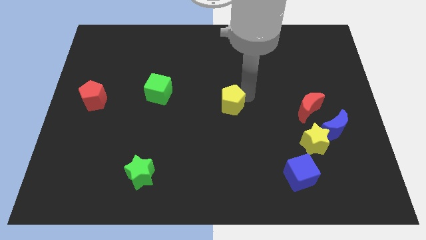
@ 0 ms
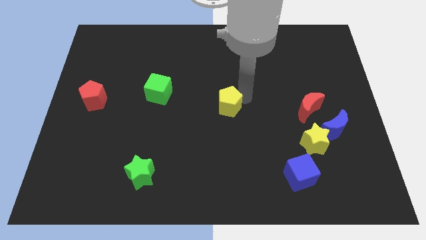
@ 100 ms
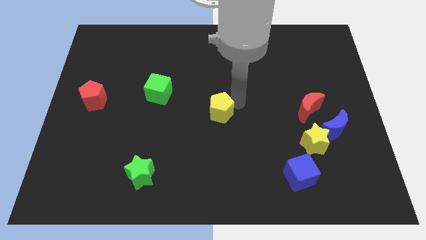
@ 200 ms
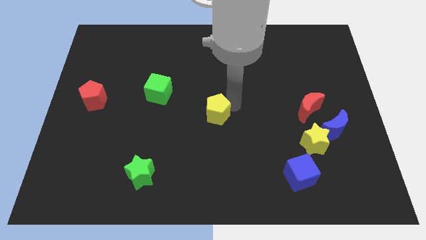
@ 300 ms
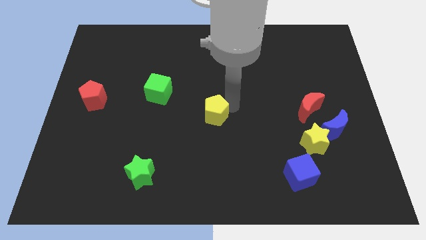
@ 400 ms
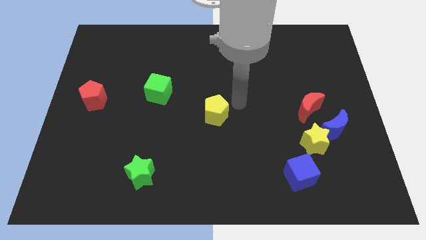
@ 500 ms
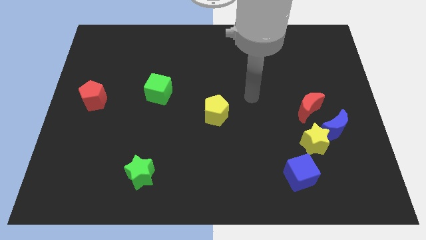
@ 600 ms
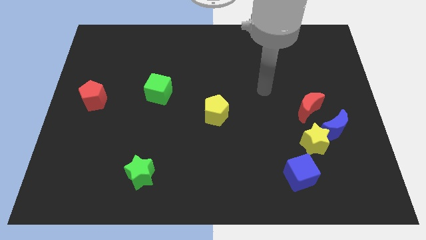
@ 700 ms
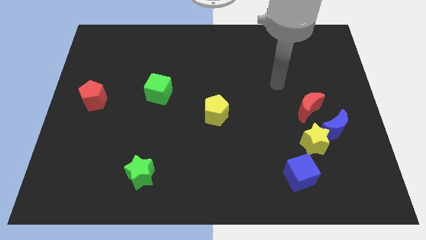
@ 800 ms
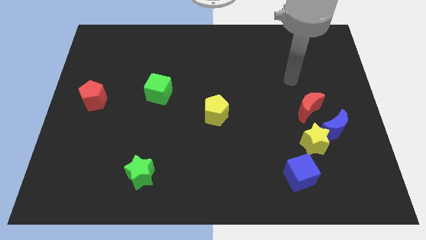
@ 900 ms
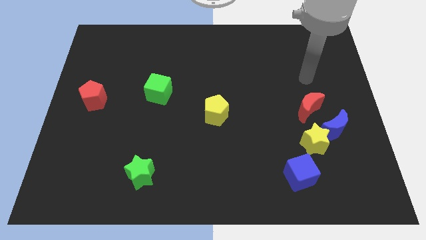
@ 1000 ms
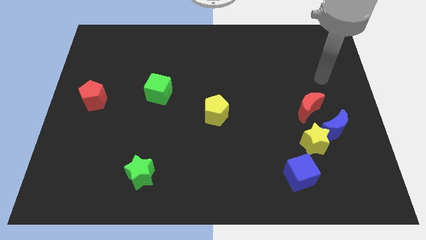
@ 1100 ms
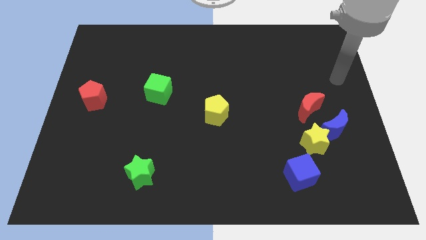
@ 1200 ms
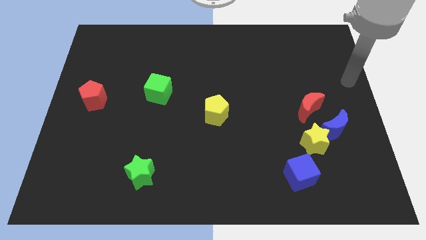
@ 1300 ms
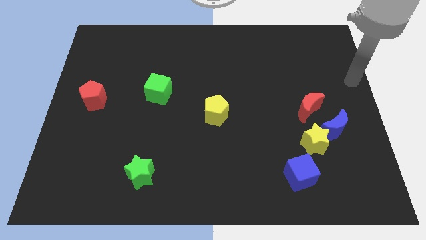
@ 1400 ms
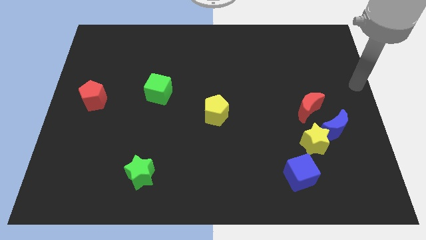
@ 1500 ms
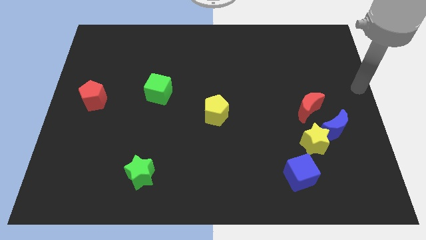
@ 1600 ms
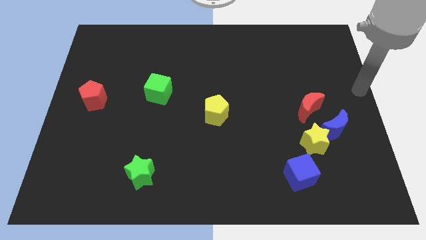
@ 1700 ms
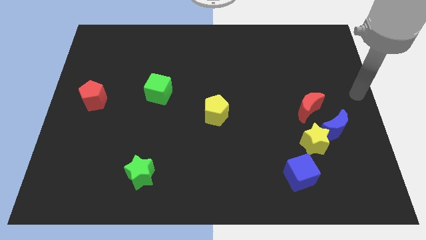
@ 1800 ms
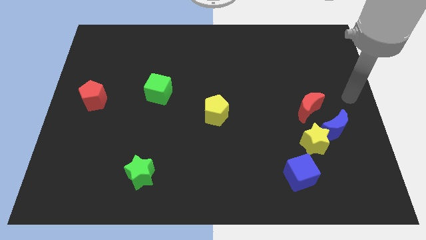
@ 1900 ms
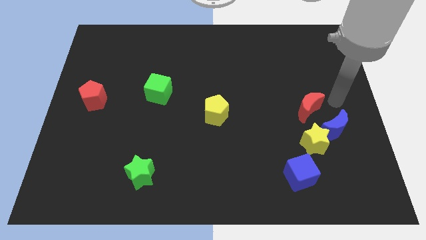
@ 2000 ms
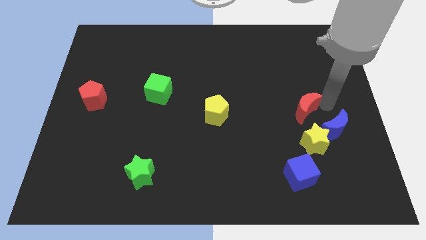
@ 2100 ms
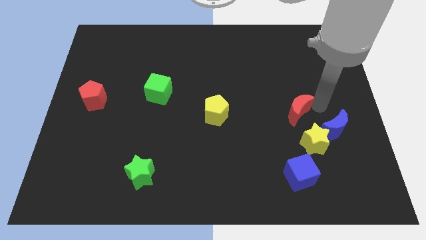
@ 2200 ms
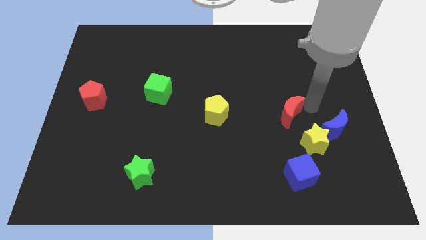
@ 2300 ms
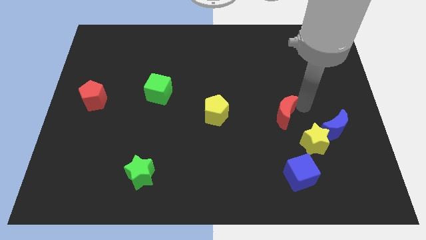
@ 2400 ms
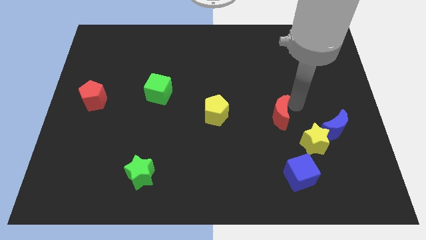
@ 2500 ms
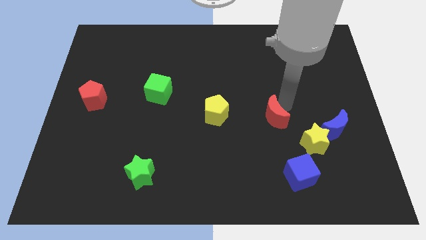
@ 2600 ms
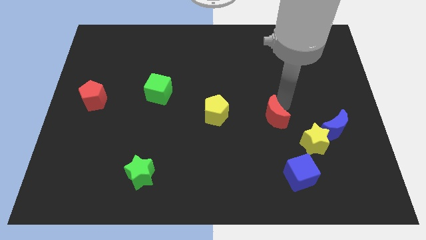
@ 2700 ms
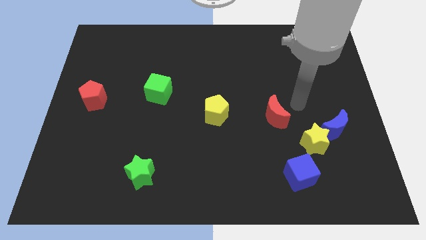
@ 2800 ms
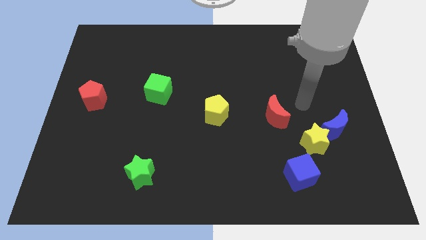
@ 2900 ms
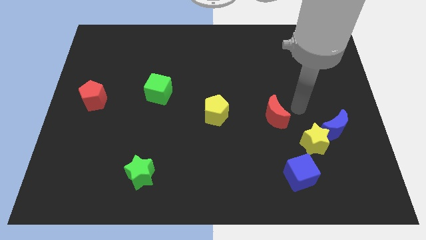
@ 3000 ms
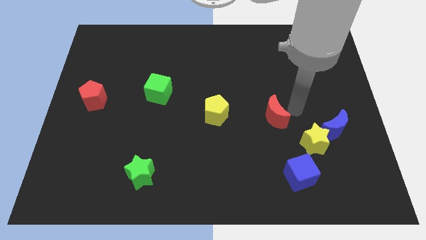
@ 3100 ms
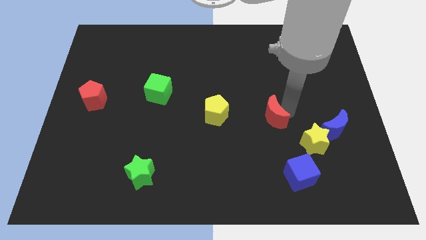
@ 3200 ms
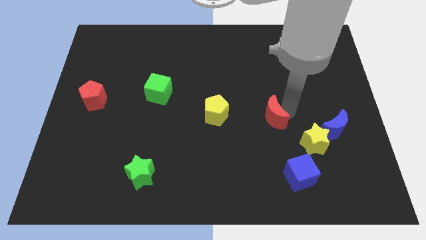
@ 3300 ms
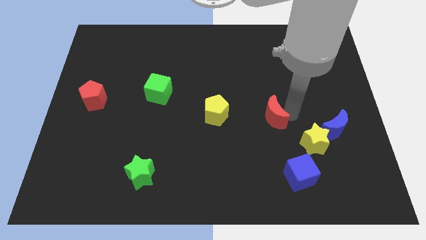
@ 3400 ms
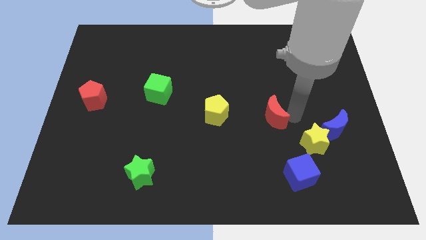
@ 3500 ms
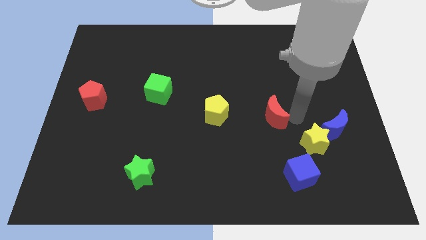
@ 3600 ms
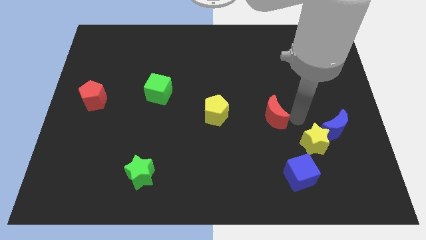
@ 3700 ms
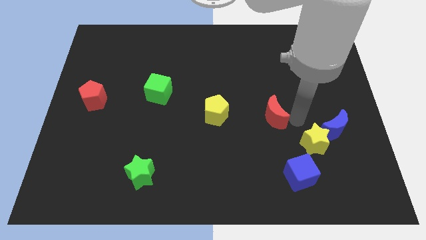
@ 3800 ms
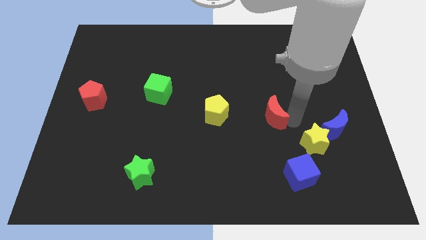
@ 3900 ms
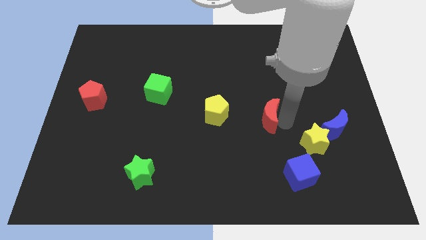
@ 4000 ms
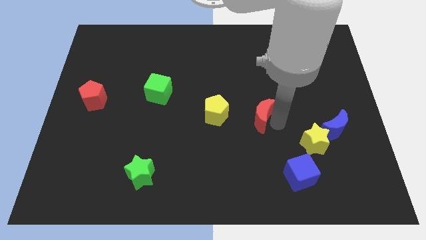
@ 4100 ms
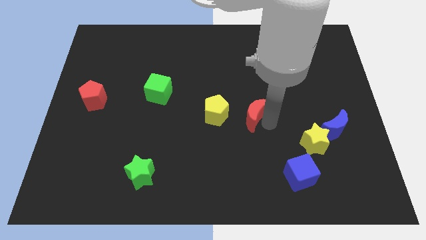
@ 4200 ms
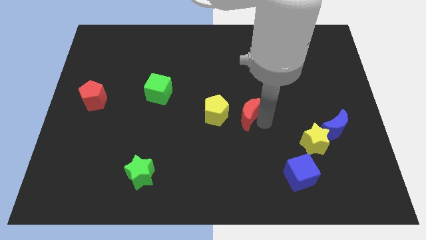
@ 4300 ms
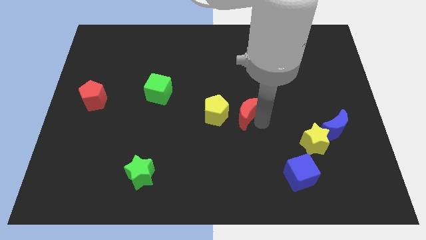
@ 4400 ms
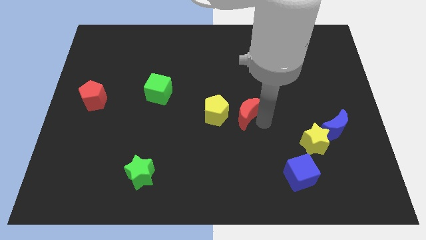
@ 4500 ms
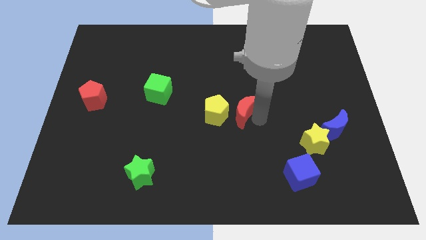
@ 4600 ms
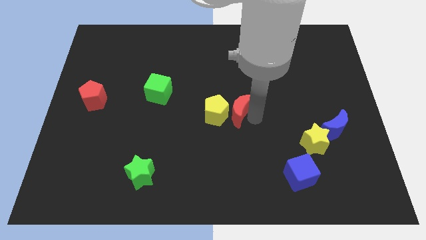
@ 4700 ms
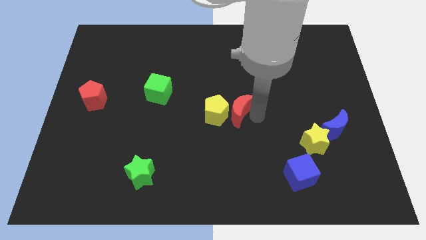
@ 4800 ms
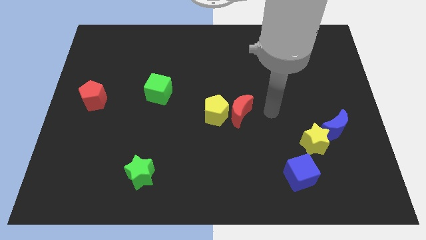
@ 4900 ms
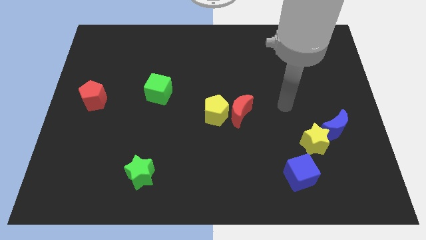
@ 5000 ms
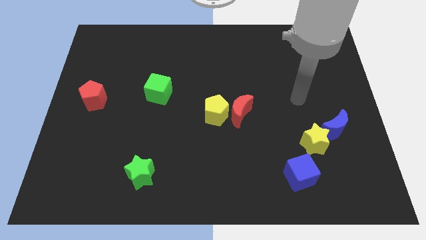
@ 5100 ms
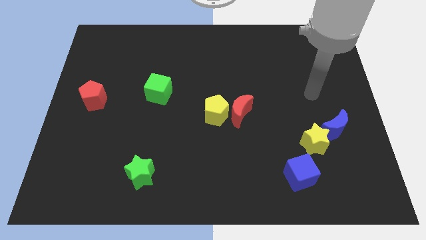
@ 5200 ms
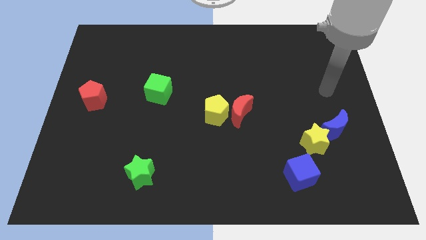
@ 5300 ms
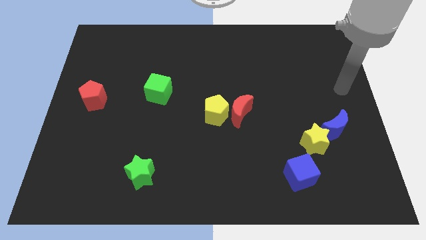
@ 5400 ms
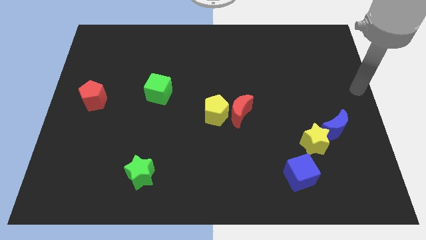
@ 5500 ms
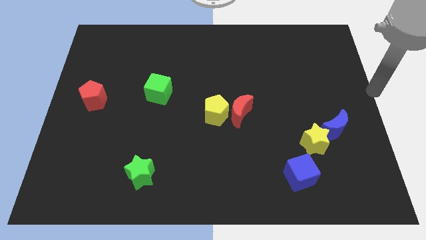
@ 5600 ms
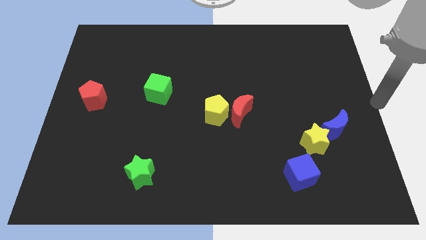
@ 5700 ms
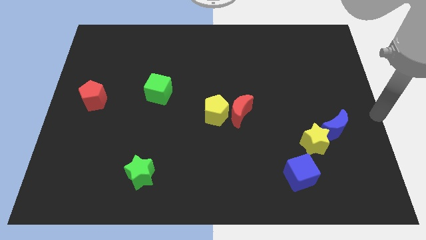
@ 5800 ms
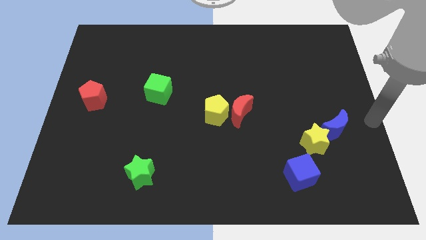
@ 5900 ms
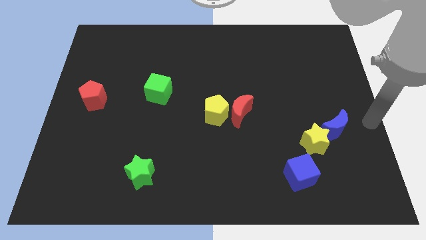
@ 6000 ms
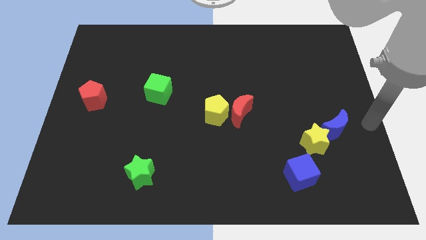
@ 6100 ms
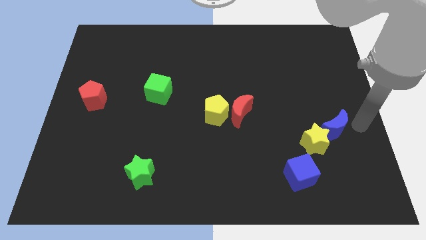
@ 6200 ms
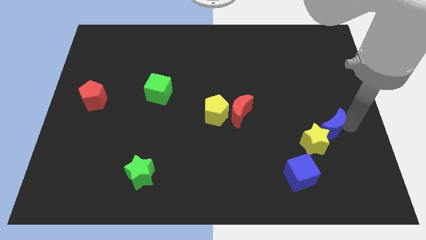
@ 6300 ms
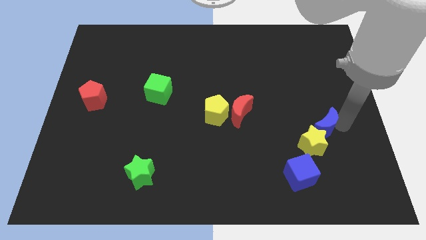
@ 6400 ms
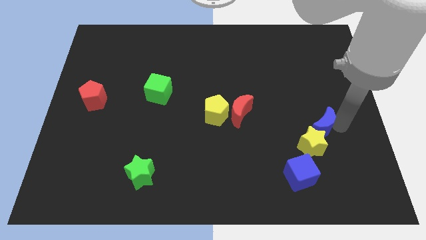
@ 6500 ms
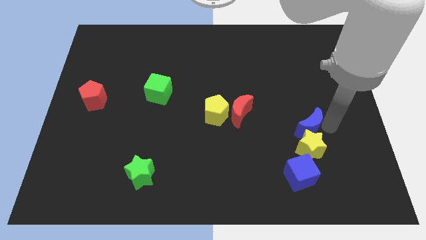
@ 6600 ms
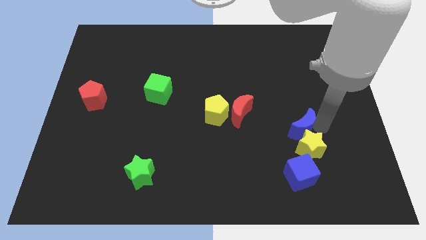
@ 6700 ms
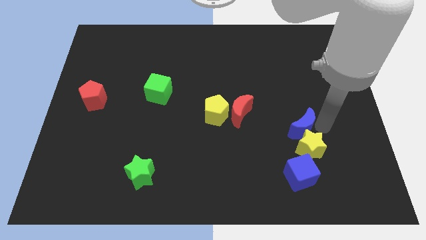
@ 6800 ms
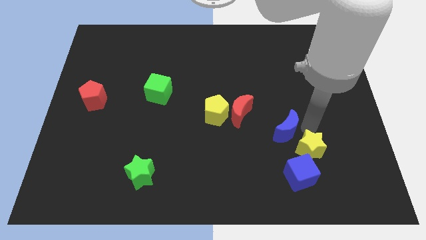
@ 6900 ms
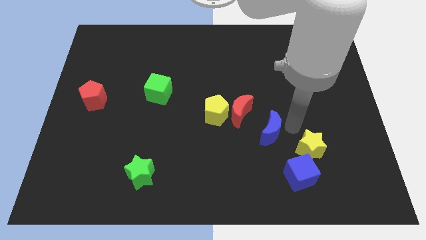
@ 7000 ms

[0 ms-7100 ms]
form a horizontal line using three blocks

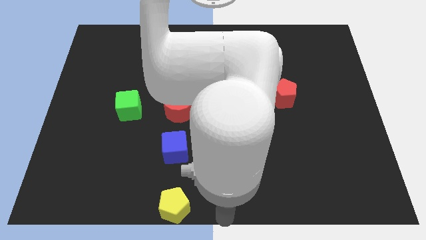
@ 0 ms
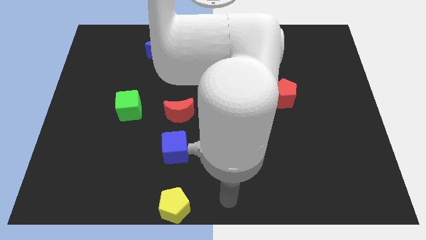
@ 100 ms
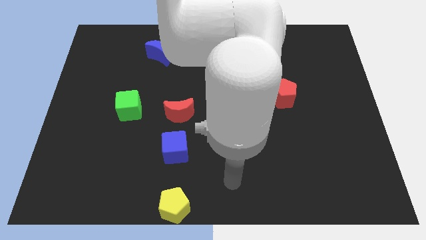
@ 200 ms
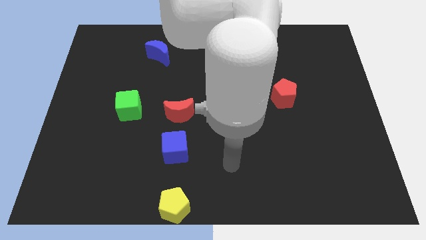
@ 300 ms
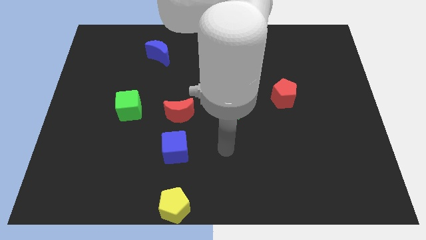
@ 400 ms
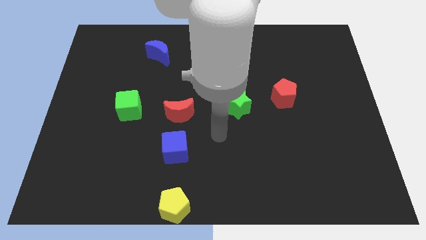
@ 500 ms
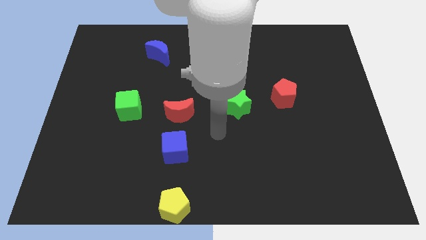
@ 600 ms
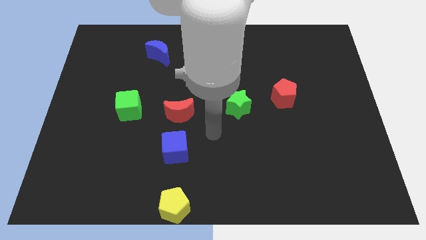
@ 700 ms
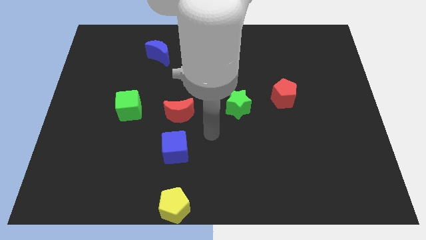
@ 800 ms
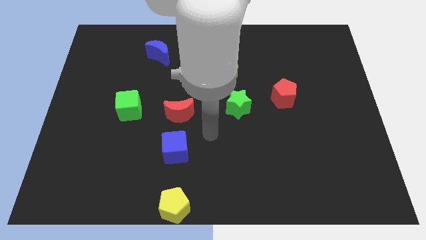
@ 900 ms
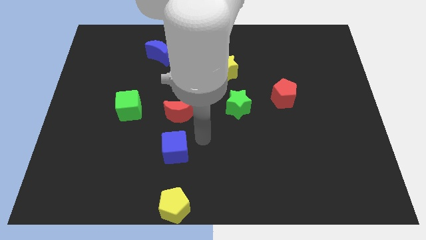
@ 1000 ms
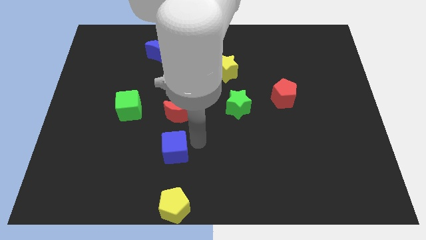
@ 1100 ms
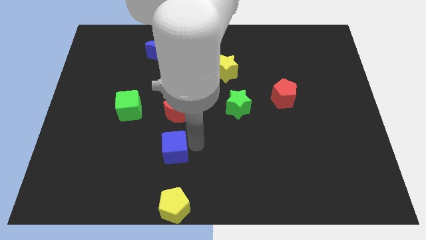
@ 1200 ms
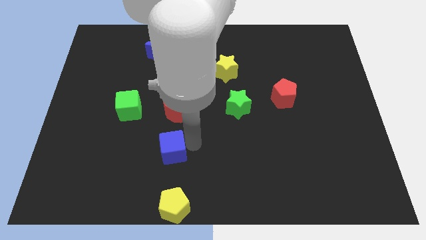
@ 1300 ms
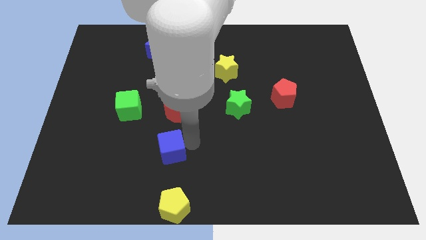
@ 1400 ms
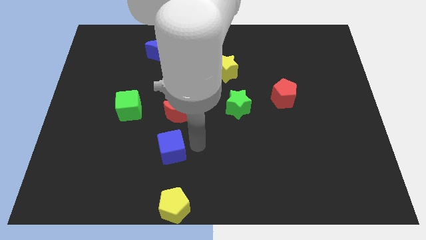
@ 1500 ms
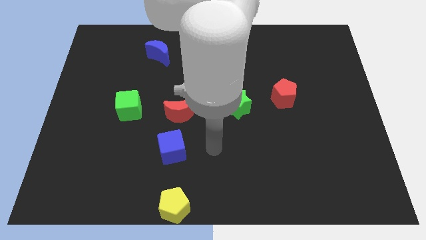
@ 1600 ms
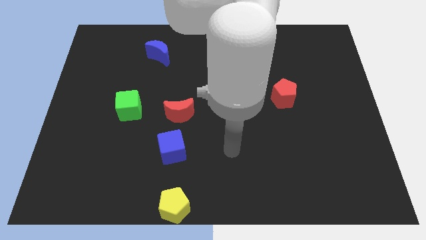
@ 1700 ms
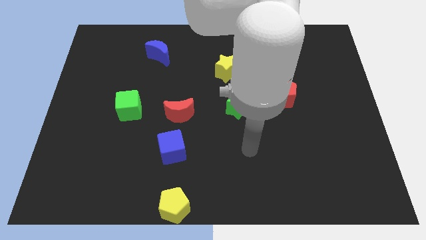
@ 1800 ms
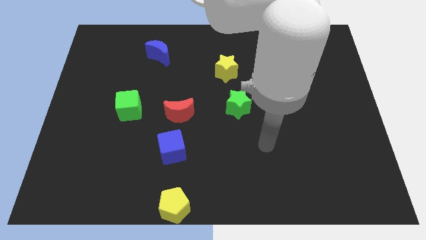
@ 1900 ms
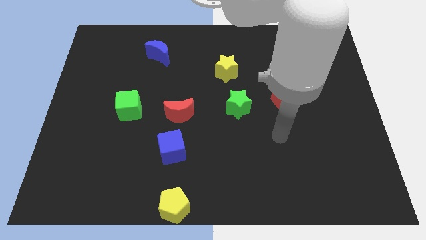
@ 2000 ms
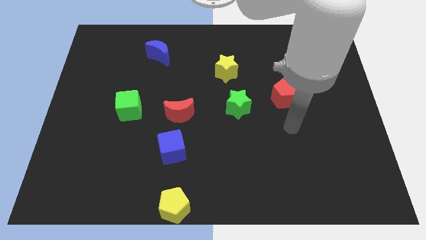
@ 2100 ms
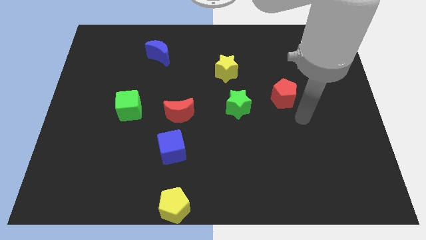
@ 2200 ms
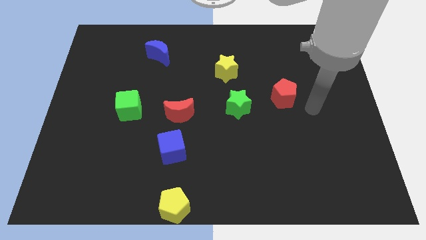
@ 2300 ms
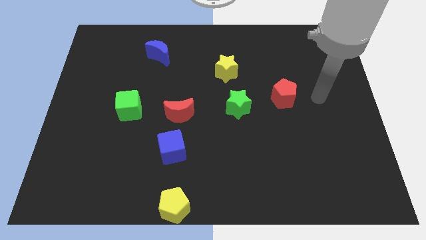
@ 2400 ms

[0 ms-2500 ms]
slightly touch right to the blue cube
